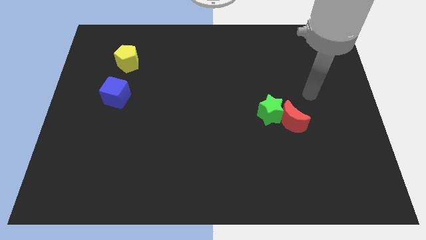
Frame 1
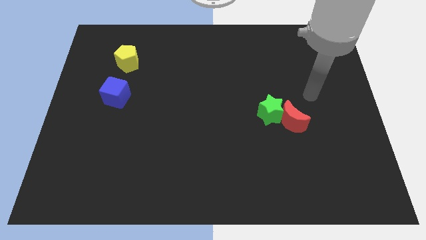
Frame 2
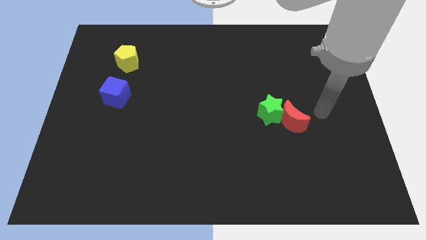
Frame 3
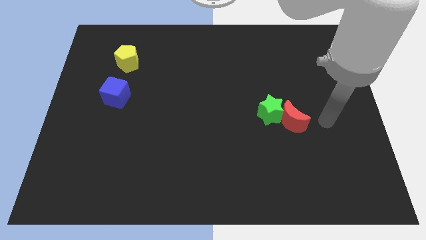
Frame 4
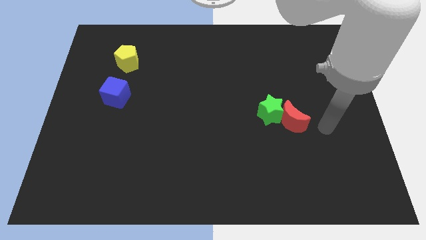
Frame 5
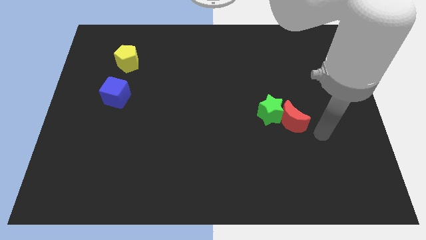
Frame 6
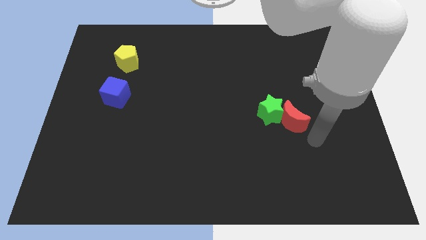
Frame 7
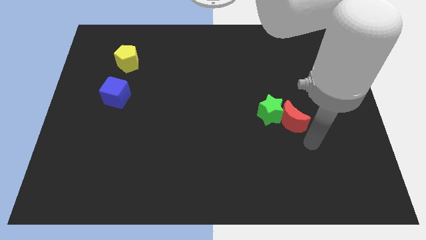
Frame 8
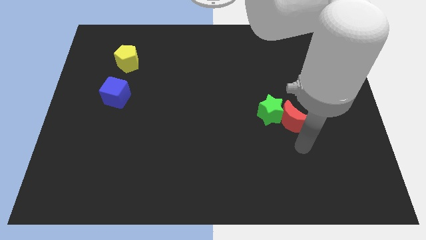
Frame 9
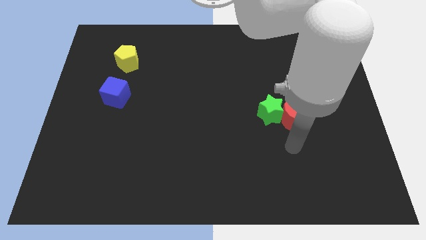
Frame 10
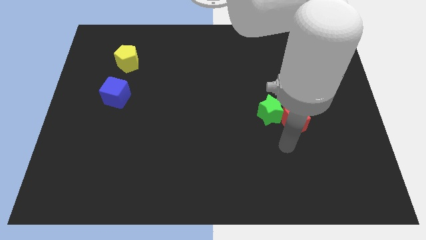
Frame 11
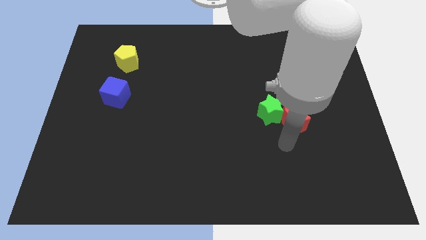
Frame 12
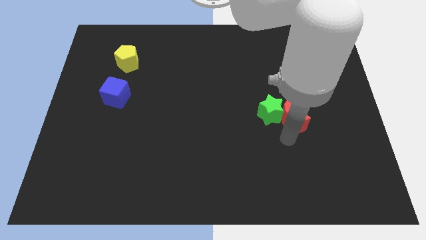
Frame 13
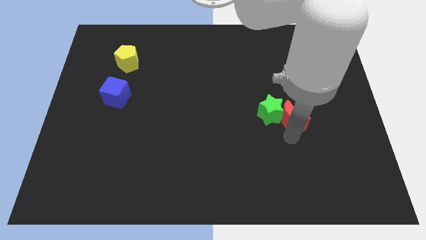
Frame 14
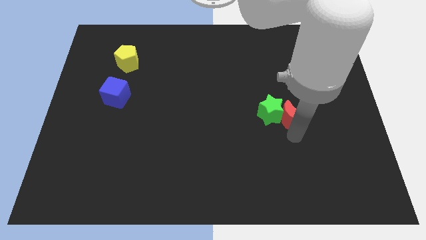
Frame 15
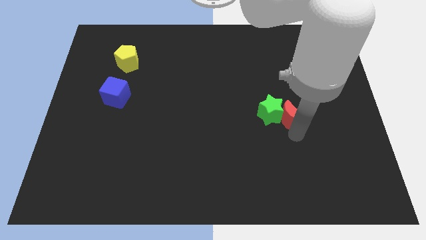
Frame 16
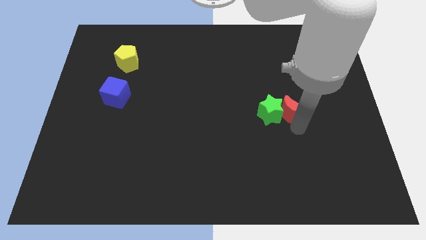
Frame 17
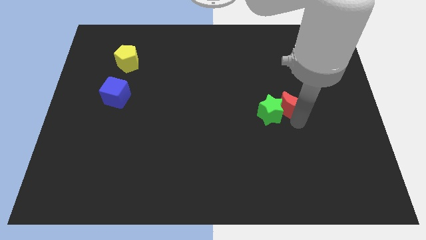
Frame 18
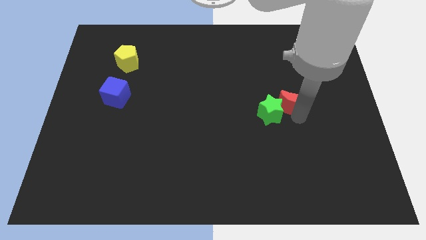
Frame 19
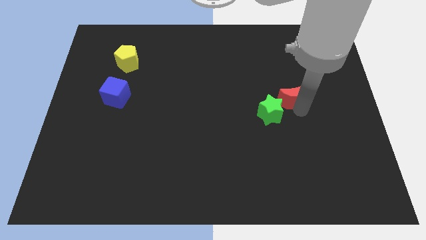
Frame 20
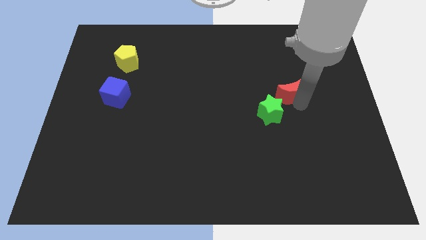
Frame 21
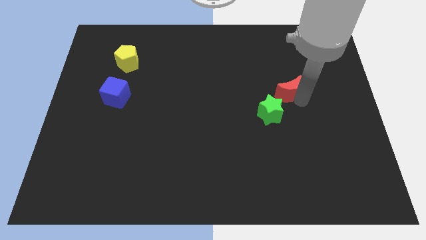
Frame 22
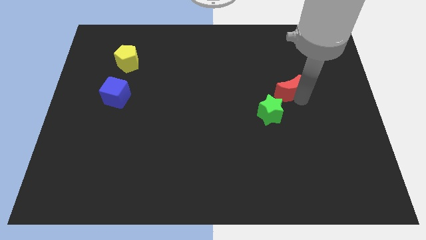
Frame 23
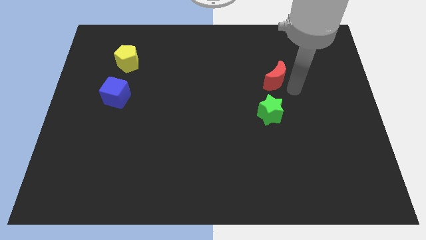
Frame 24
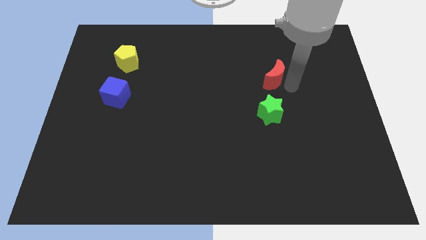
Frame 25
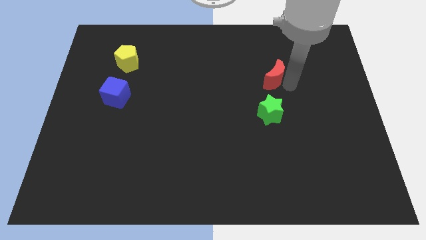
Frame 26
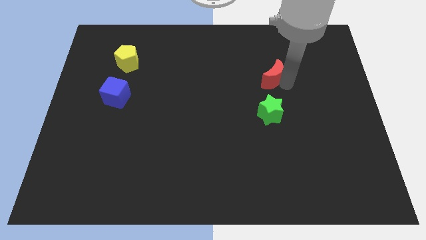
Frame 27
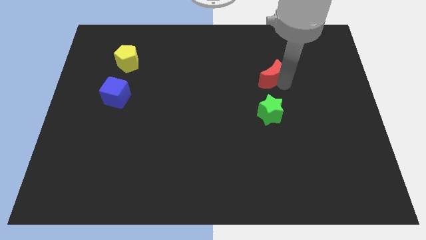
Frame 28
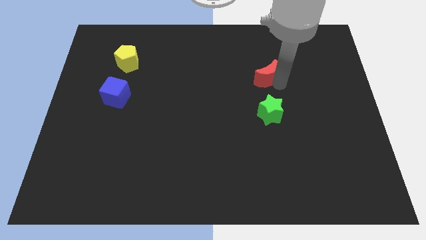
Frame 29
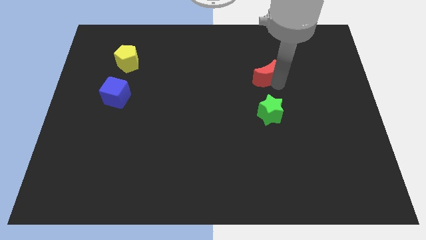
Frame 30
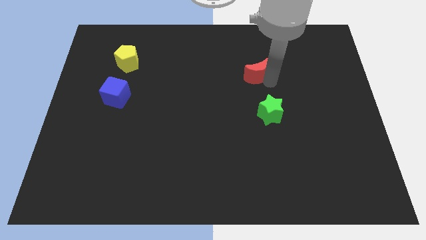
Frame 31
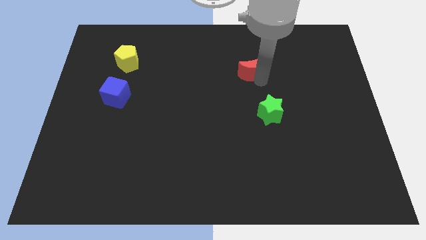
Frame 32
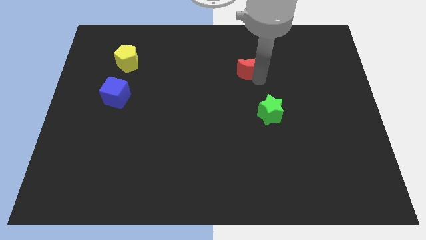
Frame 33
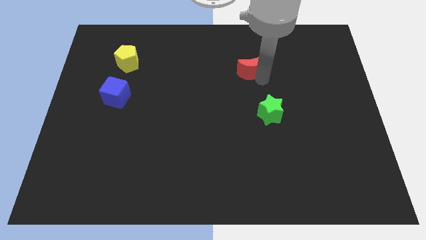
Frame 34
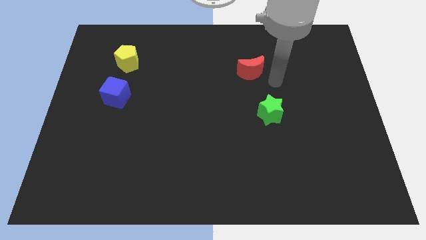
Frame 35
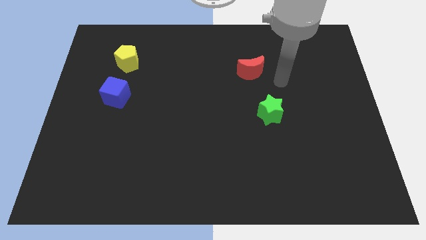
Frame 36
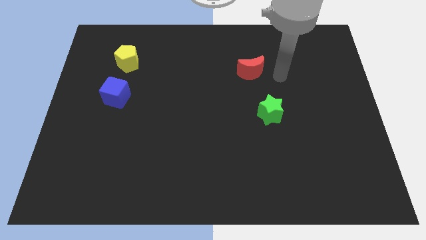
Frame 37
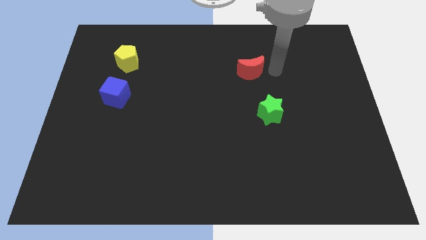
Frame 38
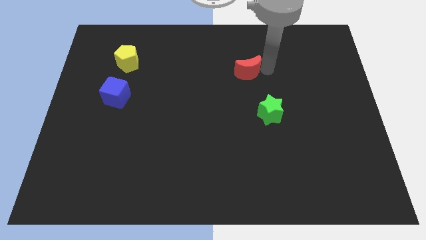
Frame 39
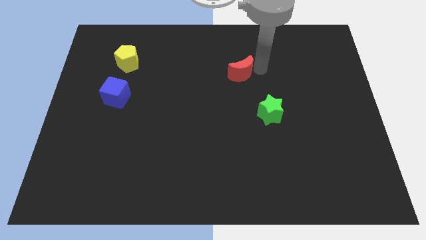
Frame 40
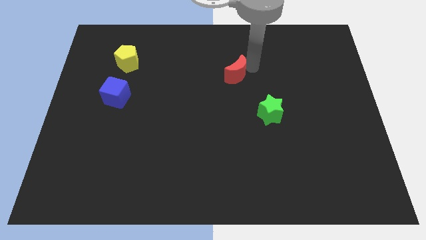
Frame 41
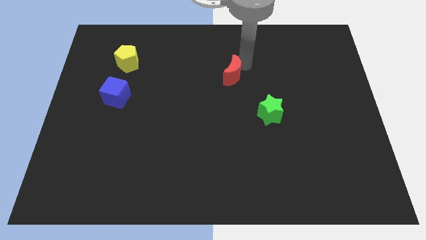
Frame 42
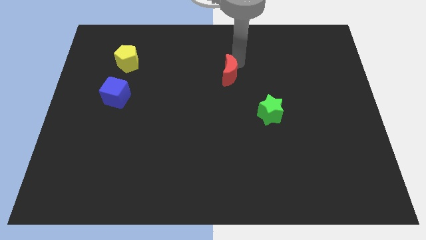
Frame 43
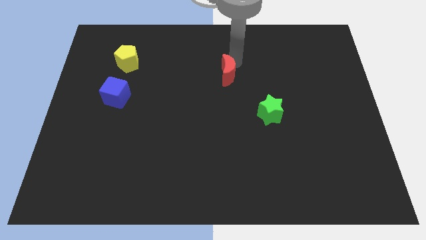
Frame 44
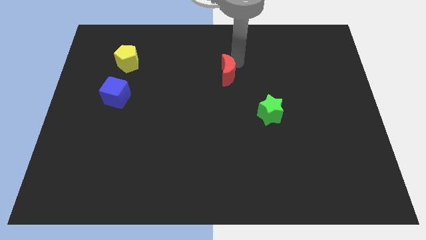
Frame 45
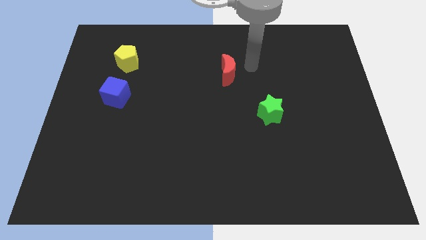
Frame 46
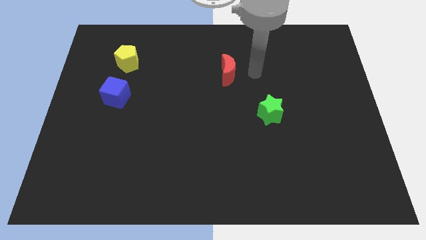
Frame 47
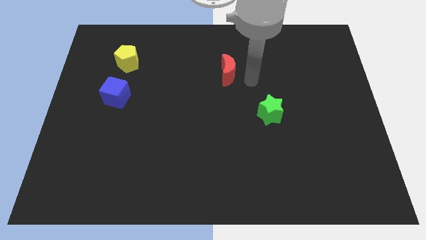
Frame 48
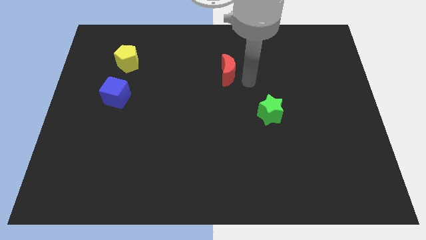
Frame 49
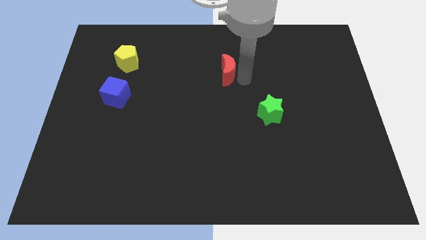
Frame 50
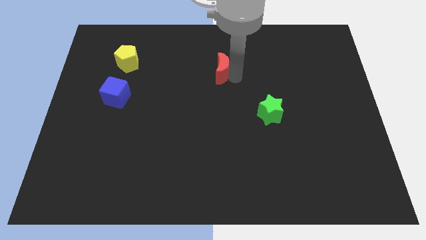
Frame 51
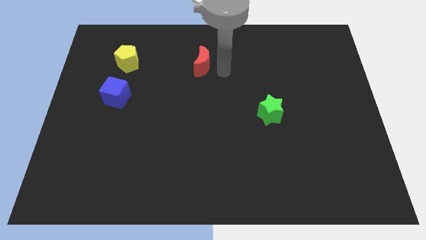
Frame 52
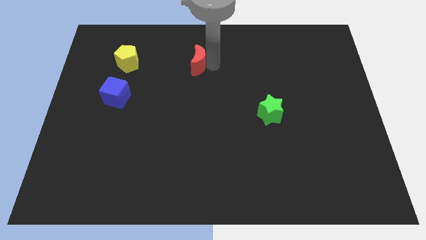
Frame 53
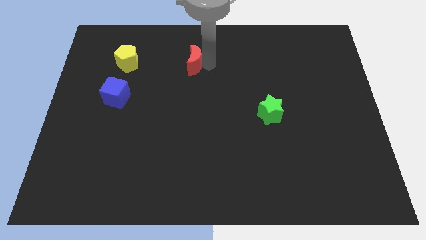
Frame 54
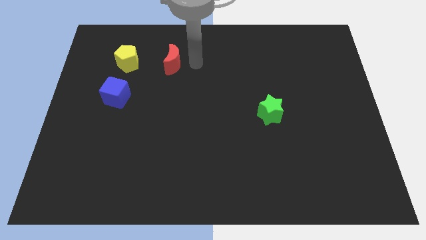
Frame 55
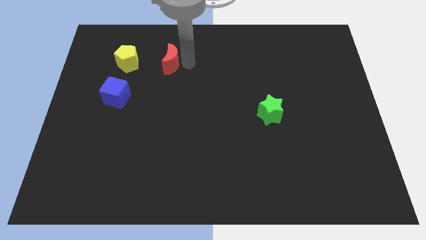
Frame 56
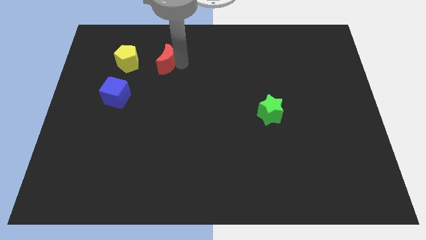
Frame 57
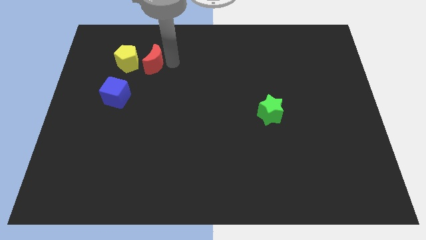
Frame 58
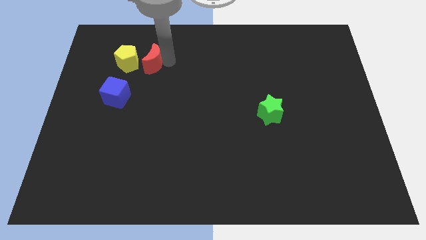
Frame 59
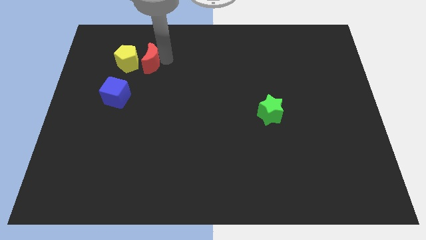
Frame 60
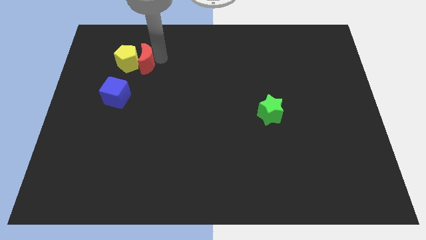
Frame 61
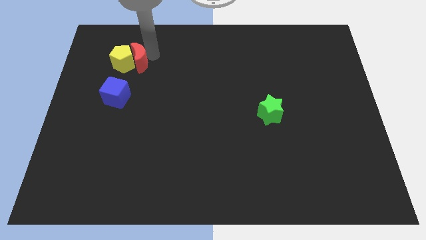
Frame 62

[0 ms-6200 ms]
move the red moon to the yellow pentagon

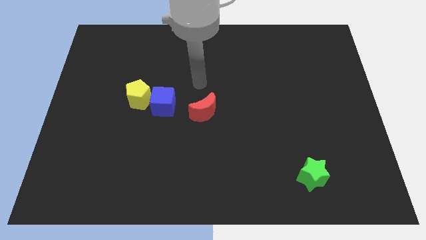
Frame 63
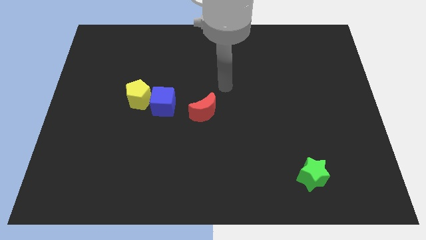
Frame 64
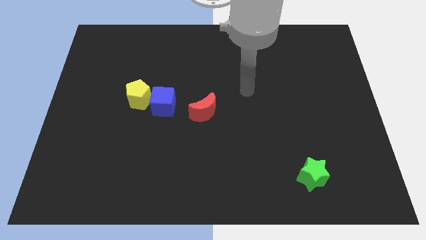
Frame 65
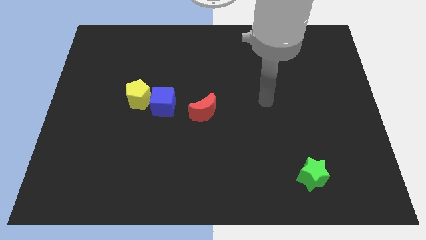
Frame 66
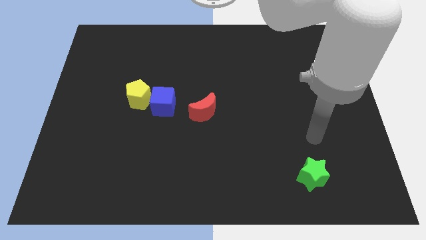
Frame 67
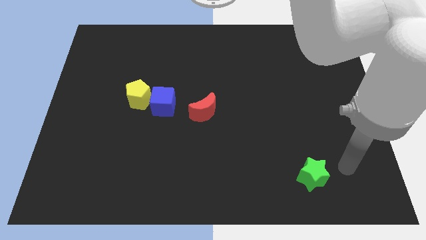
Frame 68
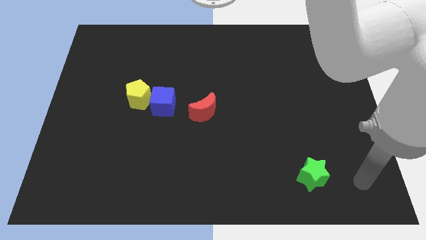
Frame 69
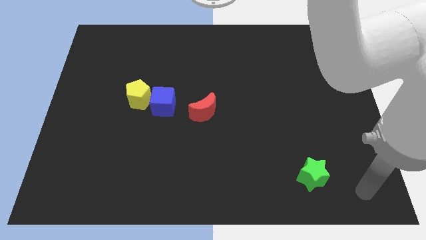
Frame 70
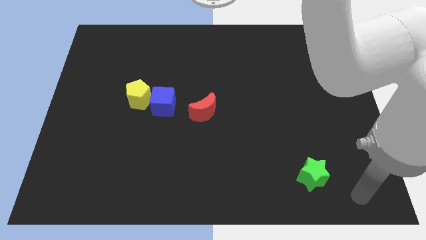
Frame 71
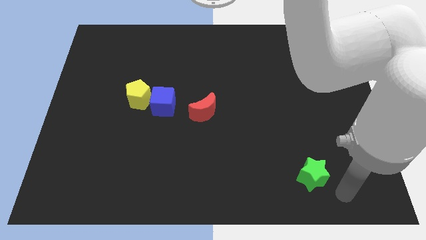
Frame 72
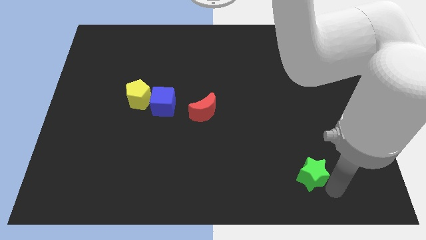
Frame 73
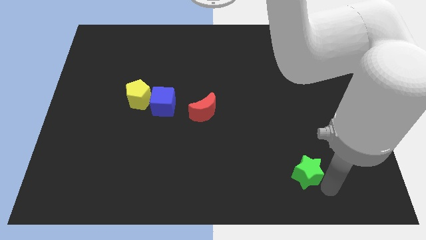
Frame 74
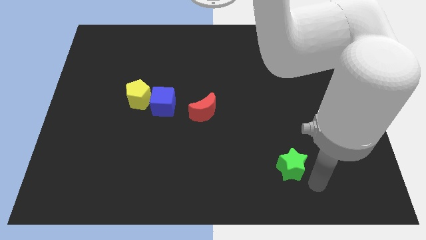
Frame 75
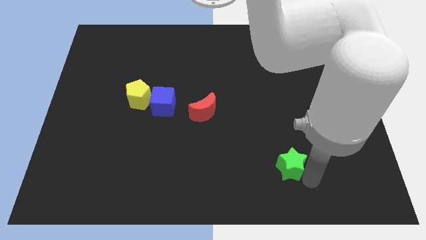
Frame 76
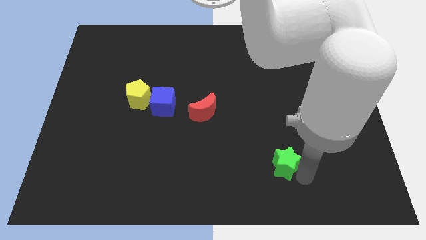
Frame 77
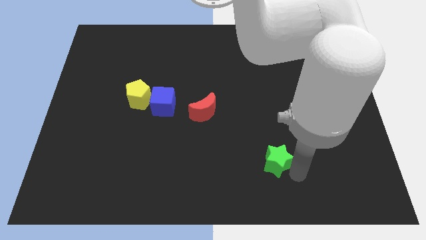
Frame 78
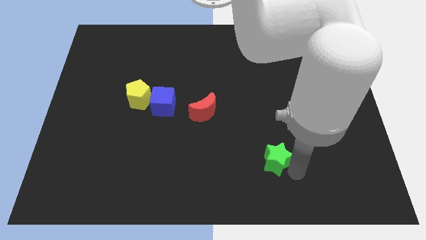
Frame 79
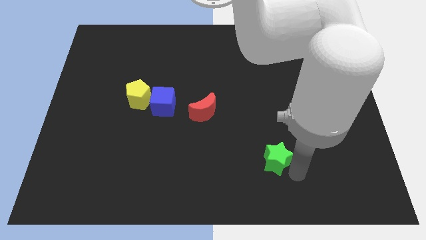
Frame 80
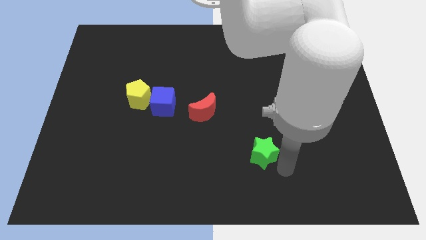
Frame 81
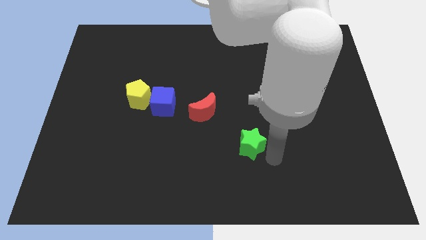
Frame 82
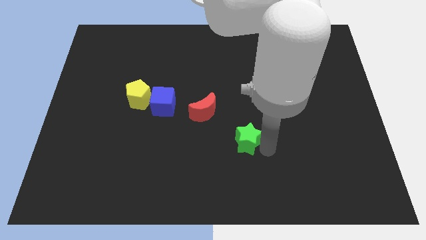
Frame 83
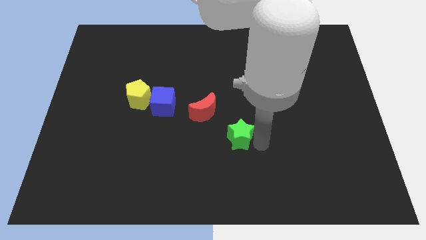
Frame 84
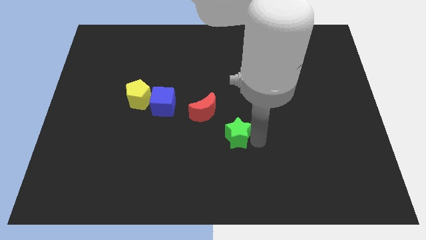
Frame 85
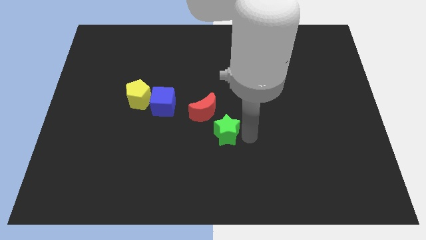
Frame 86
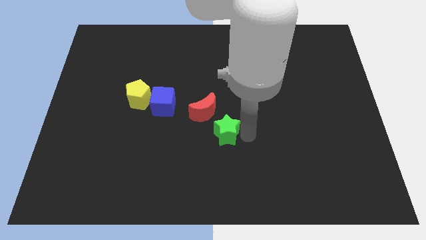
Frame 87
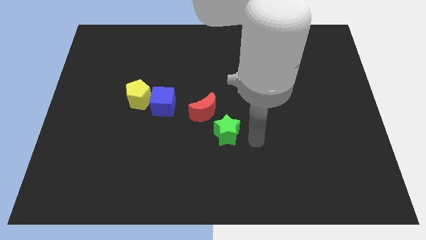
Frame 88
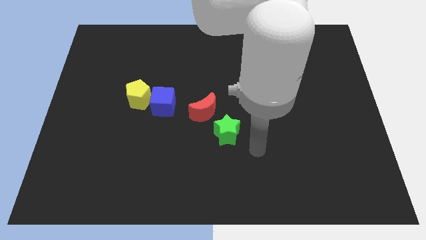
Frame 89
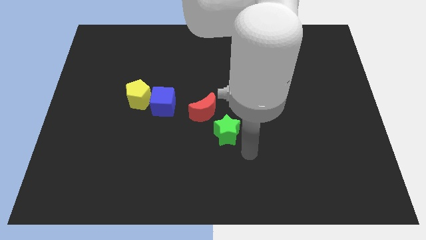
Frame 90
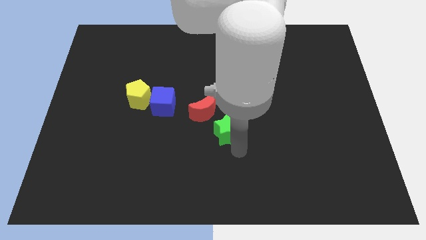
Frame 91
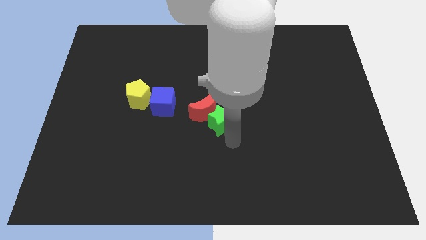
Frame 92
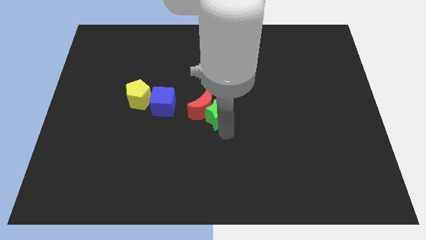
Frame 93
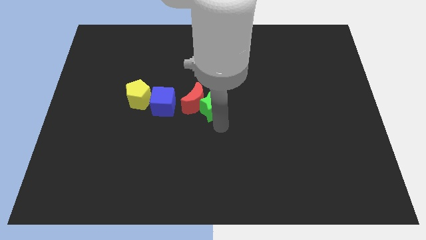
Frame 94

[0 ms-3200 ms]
put the green star towards the red moon
